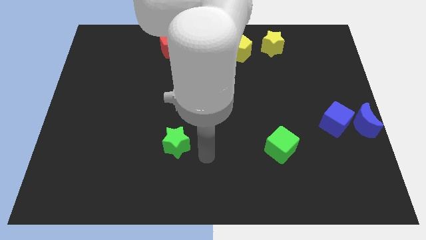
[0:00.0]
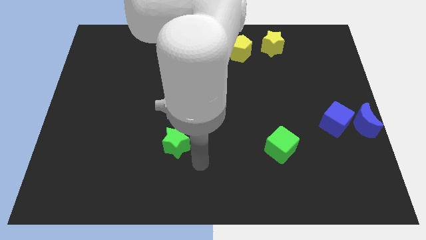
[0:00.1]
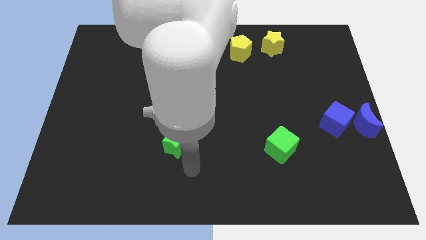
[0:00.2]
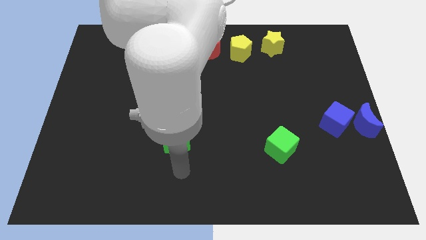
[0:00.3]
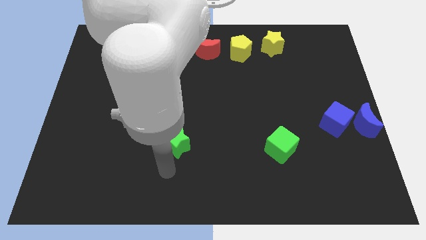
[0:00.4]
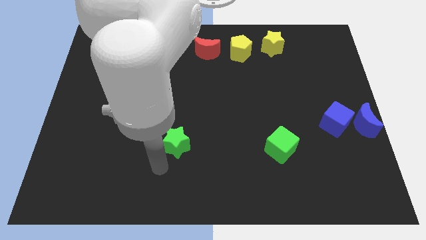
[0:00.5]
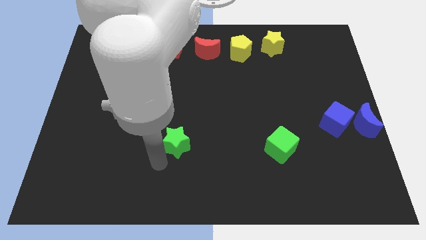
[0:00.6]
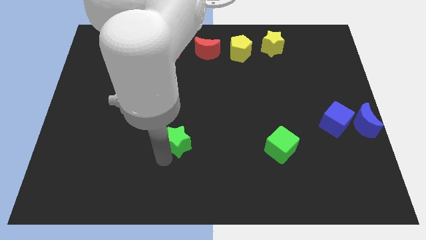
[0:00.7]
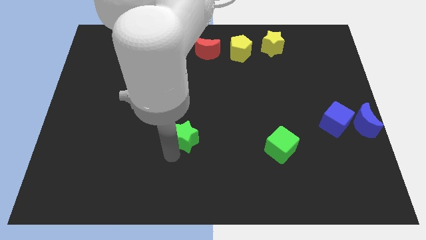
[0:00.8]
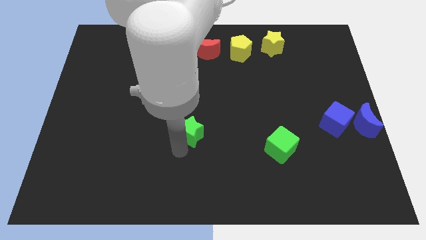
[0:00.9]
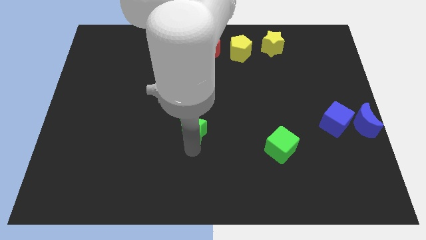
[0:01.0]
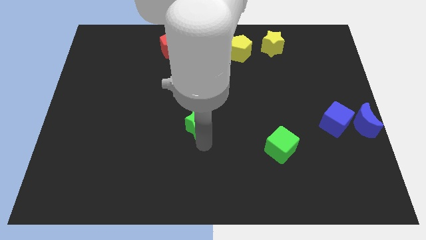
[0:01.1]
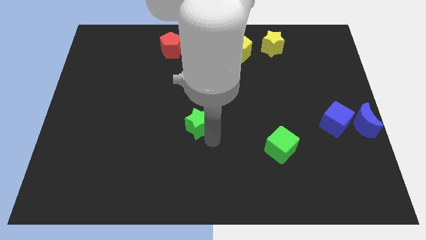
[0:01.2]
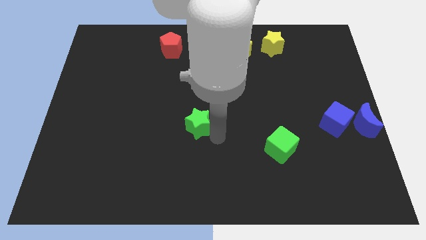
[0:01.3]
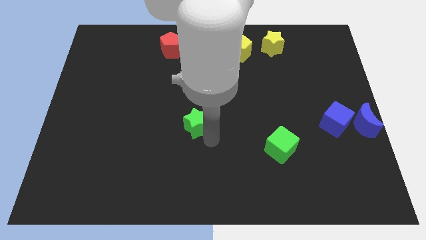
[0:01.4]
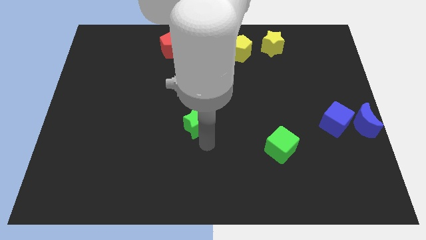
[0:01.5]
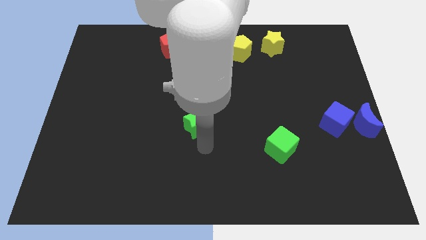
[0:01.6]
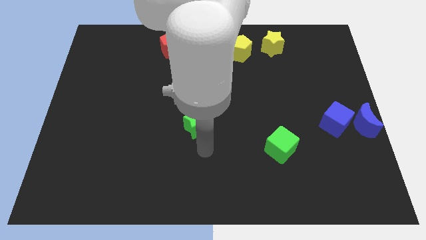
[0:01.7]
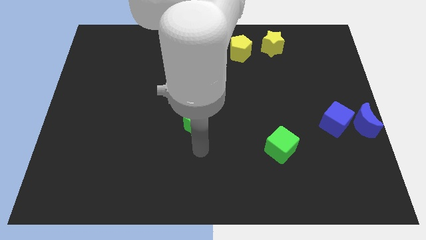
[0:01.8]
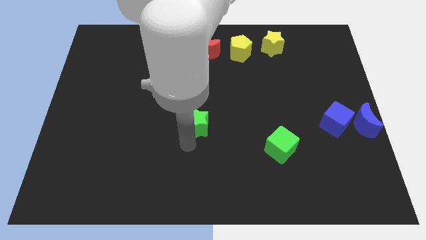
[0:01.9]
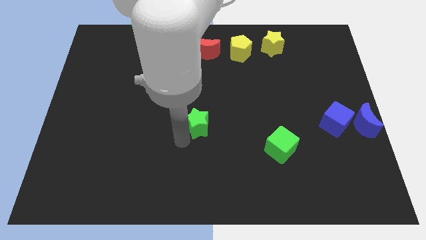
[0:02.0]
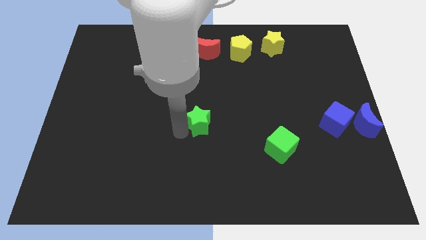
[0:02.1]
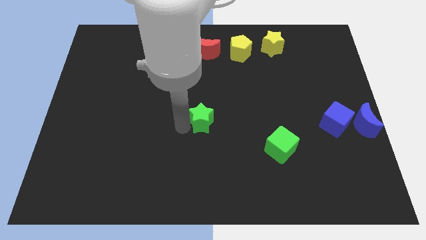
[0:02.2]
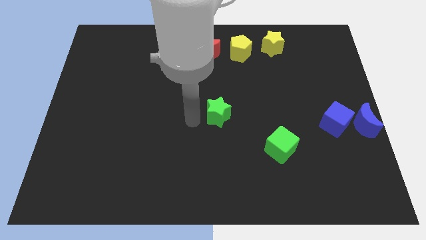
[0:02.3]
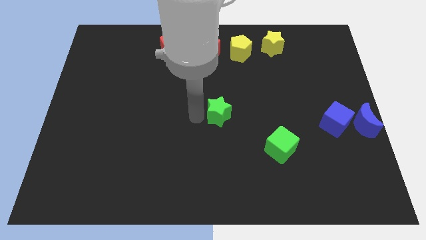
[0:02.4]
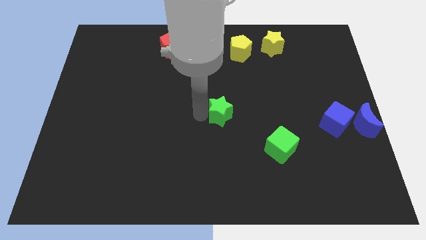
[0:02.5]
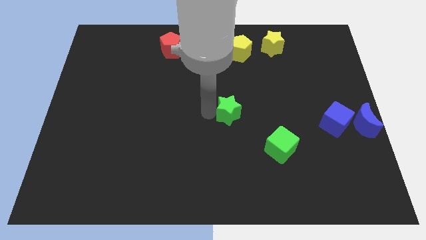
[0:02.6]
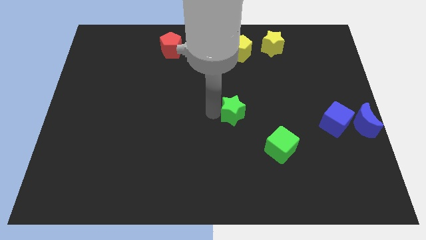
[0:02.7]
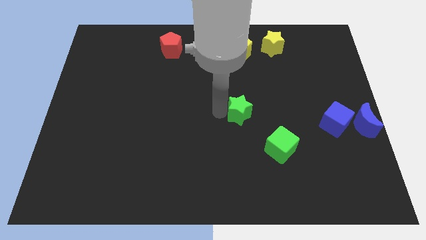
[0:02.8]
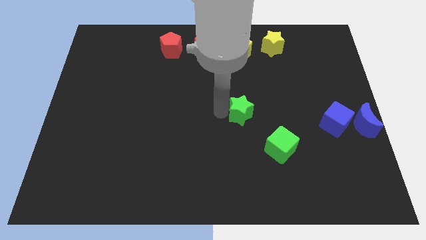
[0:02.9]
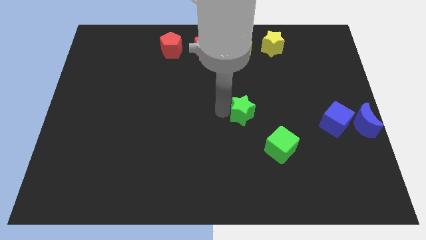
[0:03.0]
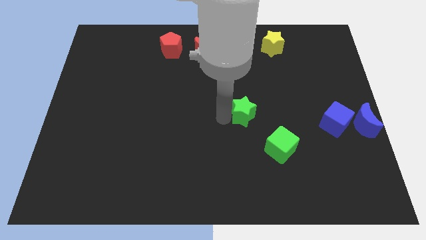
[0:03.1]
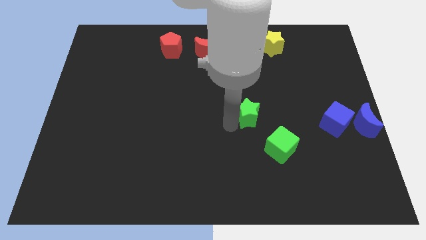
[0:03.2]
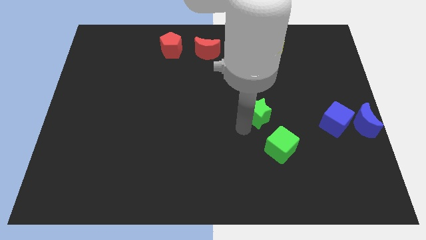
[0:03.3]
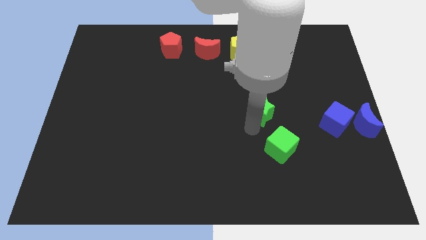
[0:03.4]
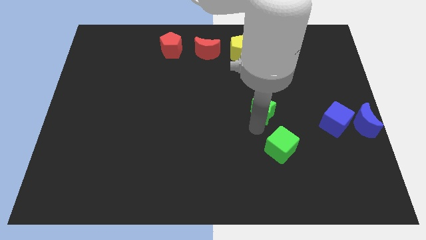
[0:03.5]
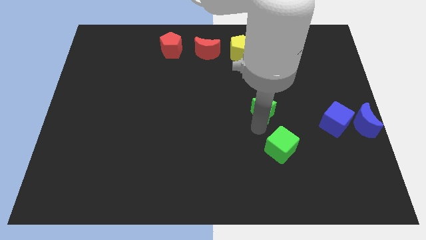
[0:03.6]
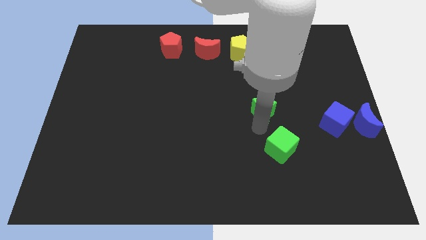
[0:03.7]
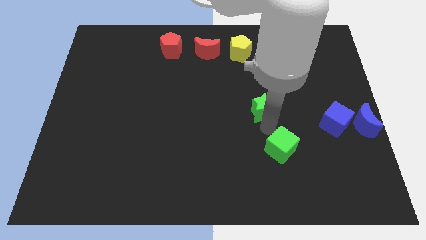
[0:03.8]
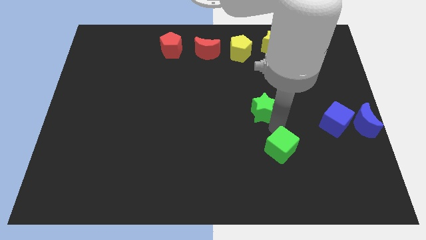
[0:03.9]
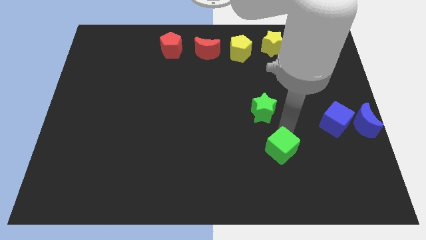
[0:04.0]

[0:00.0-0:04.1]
place the green star above the green cube

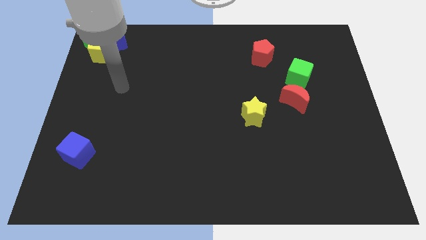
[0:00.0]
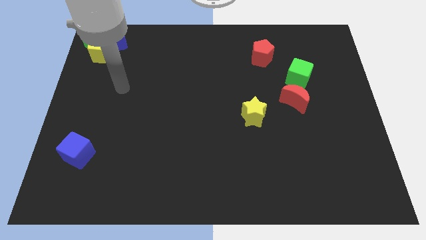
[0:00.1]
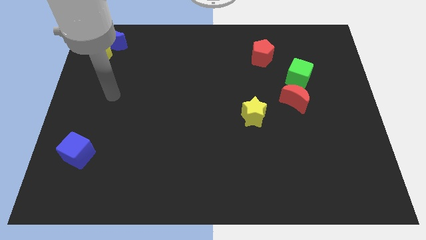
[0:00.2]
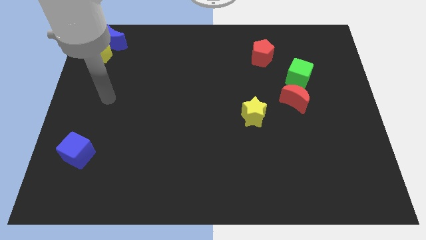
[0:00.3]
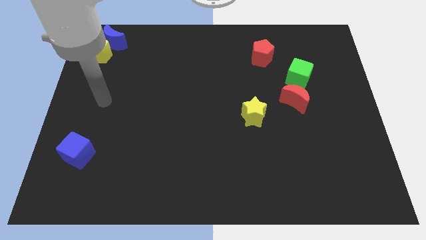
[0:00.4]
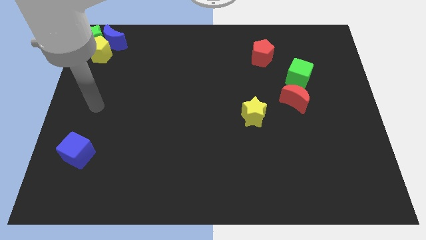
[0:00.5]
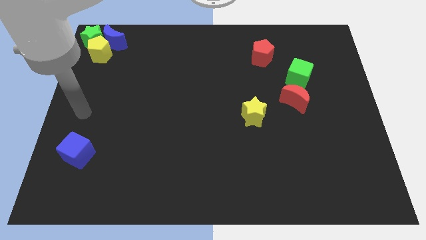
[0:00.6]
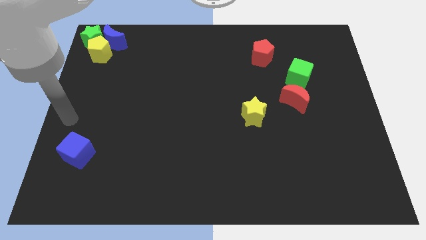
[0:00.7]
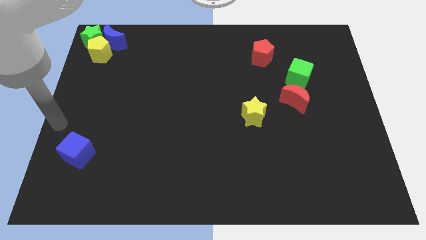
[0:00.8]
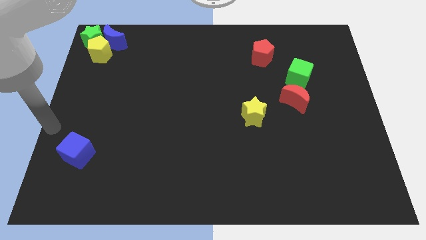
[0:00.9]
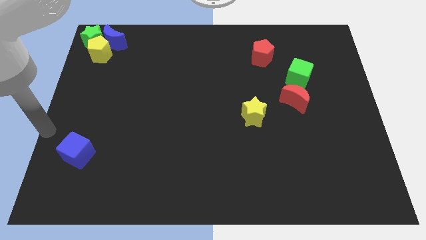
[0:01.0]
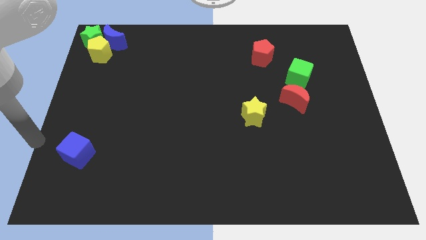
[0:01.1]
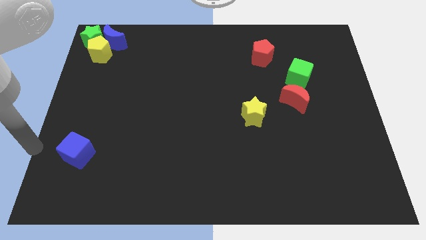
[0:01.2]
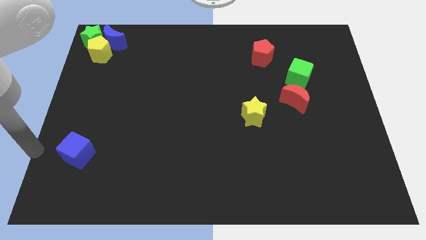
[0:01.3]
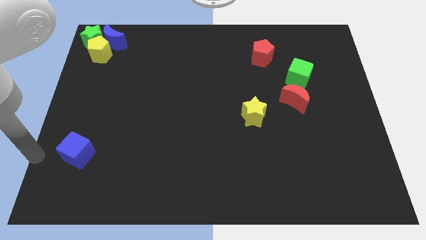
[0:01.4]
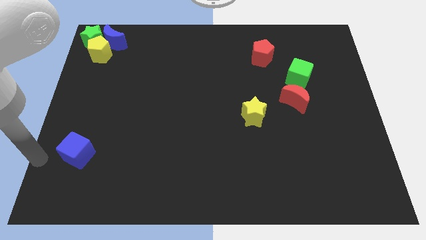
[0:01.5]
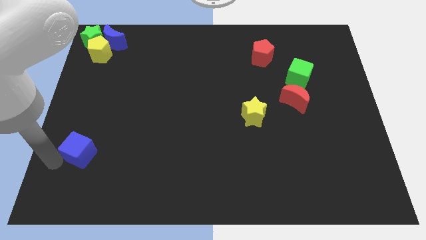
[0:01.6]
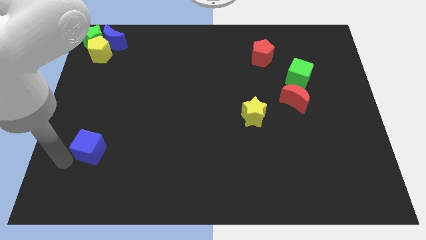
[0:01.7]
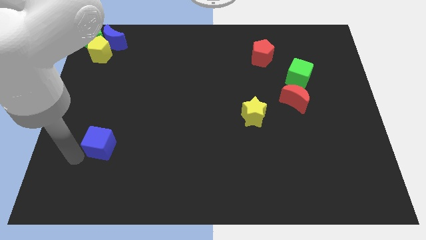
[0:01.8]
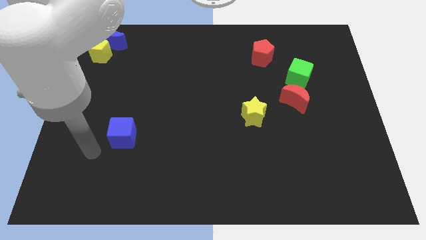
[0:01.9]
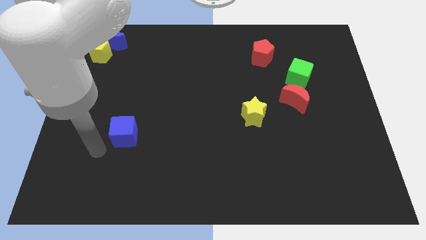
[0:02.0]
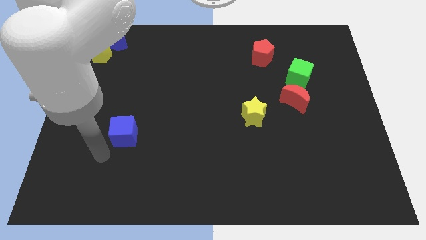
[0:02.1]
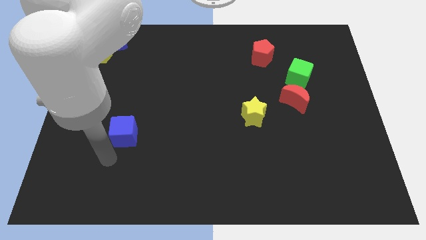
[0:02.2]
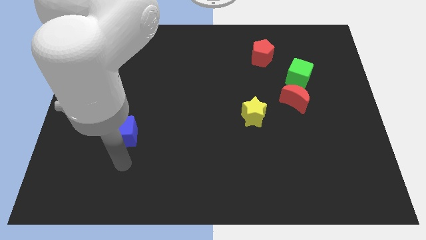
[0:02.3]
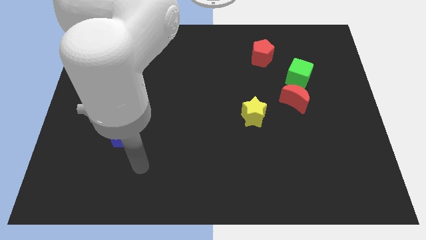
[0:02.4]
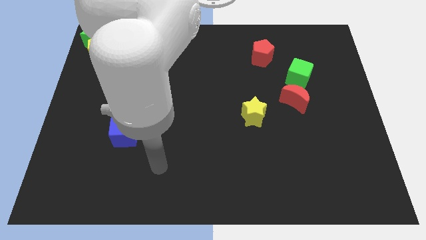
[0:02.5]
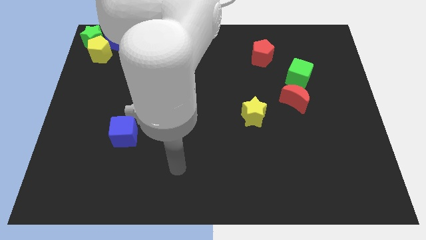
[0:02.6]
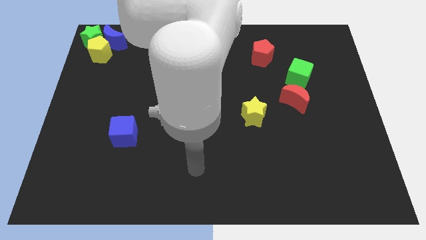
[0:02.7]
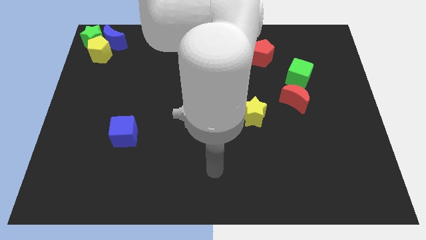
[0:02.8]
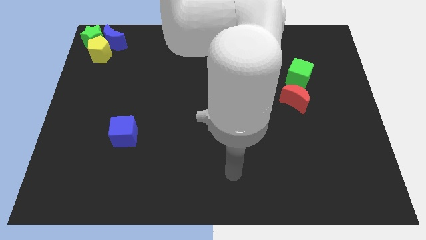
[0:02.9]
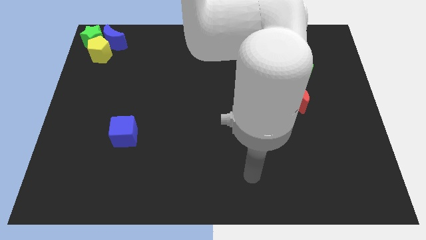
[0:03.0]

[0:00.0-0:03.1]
push blue cube slightly upwards

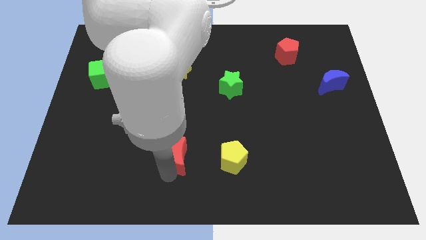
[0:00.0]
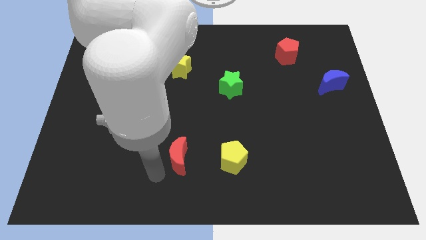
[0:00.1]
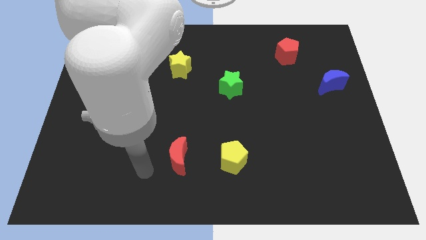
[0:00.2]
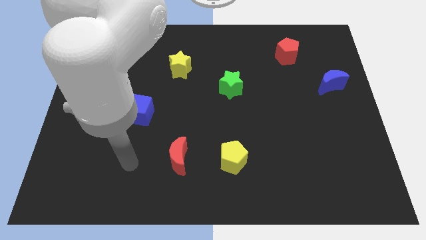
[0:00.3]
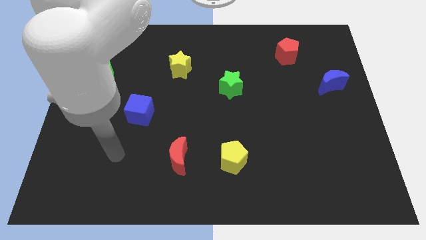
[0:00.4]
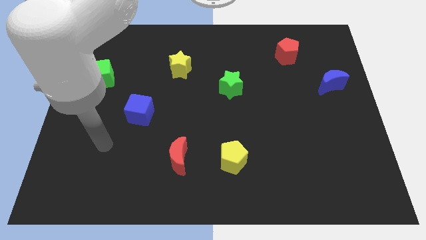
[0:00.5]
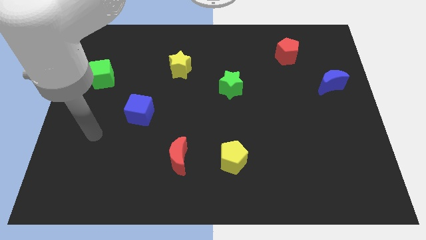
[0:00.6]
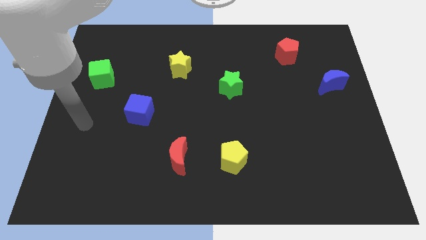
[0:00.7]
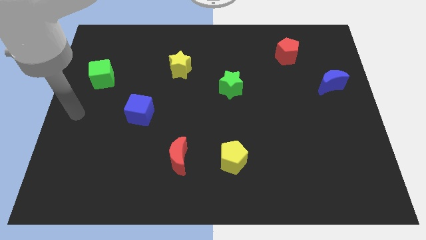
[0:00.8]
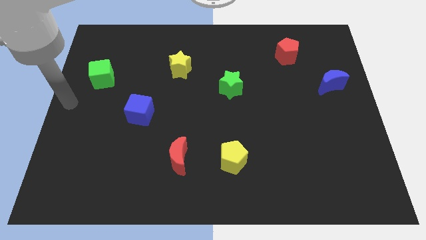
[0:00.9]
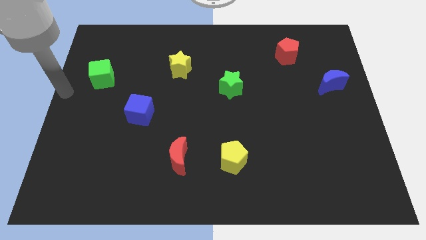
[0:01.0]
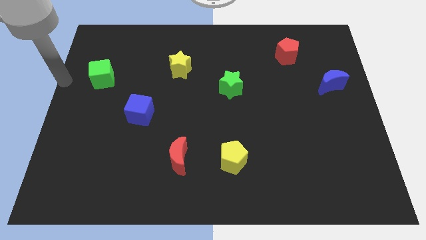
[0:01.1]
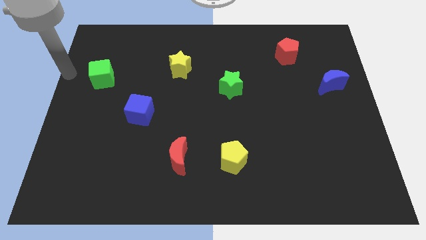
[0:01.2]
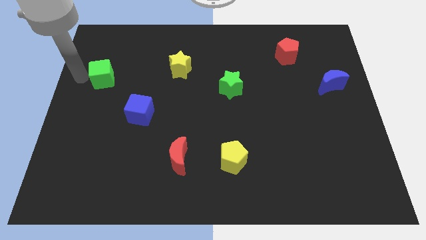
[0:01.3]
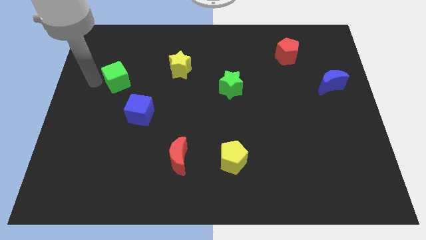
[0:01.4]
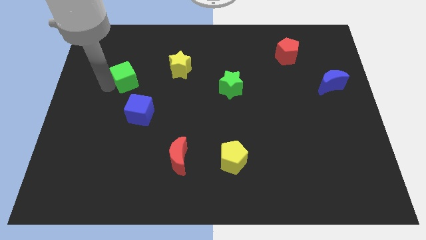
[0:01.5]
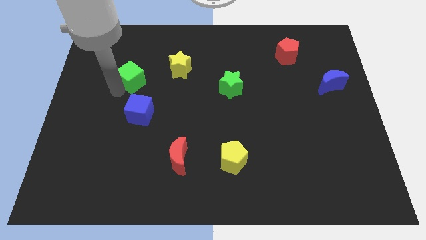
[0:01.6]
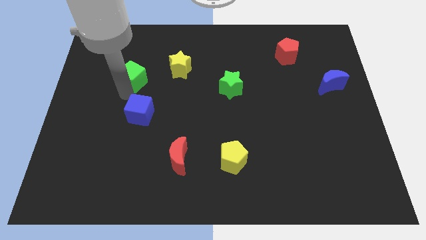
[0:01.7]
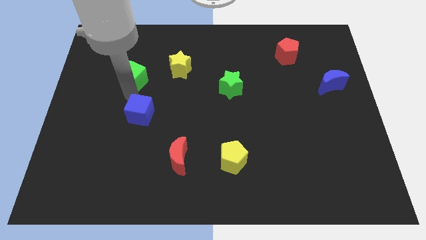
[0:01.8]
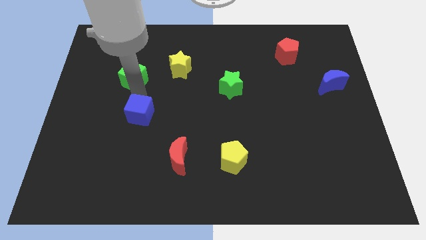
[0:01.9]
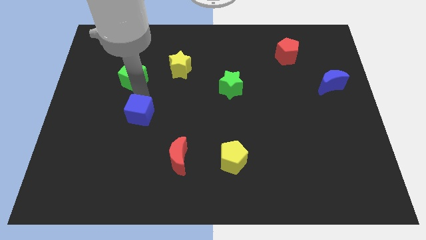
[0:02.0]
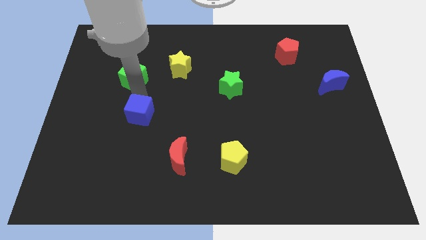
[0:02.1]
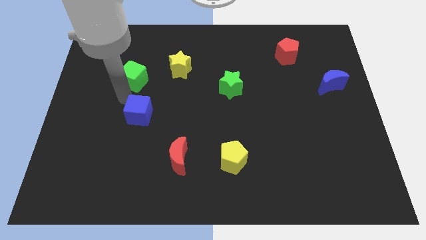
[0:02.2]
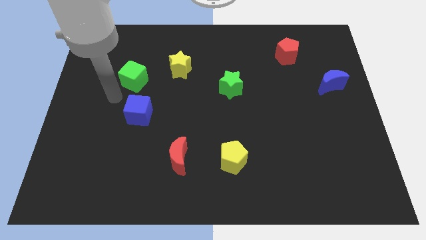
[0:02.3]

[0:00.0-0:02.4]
push the green cube above the blue cube
